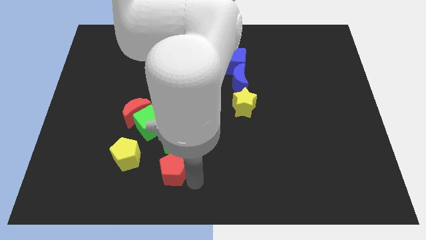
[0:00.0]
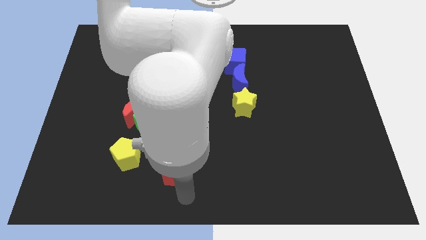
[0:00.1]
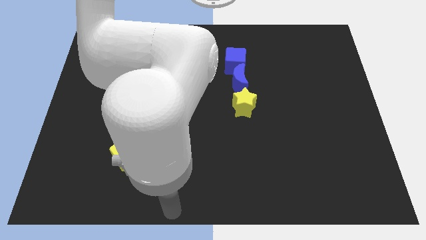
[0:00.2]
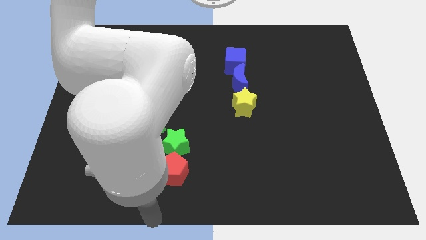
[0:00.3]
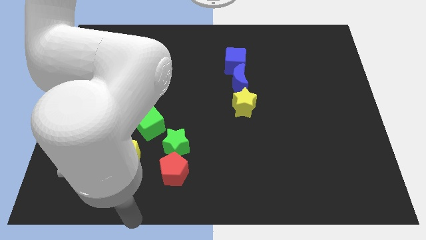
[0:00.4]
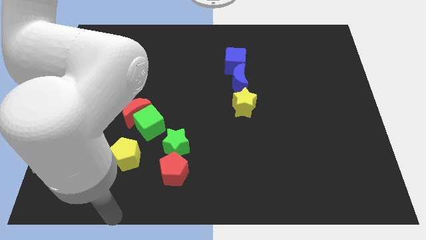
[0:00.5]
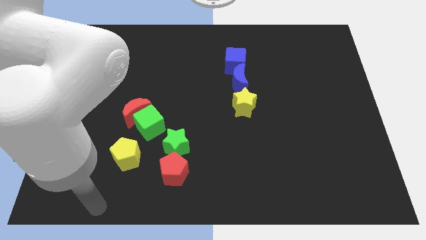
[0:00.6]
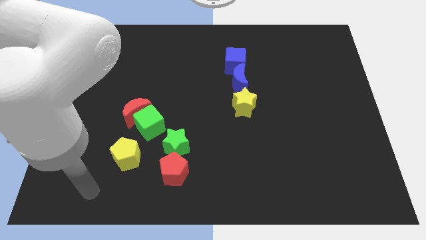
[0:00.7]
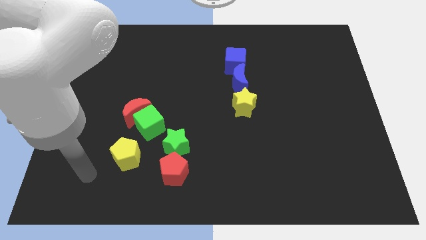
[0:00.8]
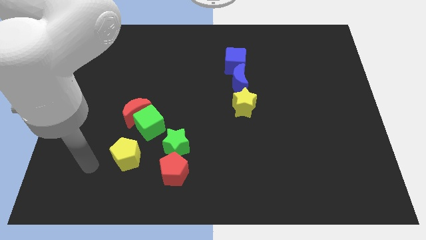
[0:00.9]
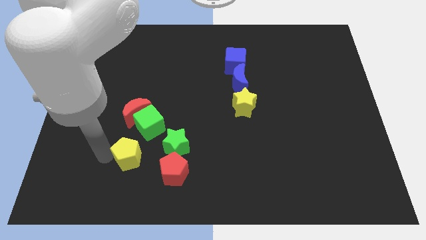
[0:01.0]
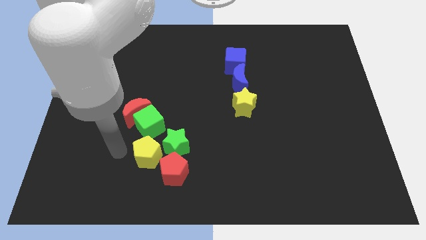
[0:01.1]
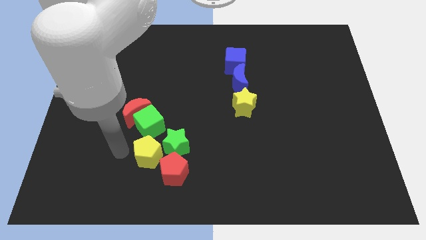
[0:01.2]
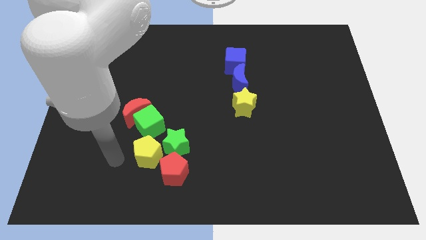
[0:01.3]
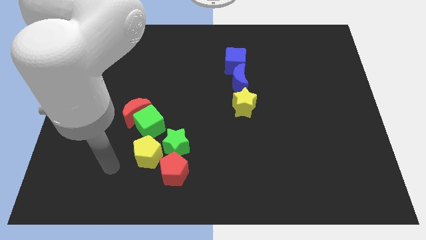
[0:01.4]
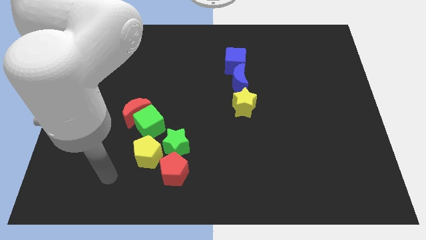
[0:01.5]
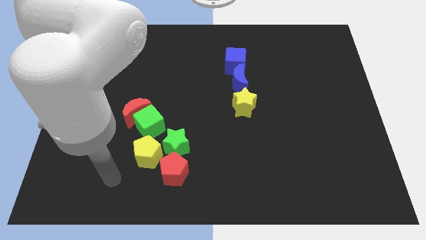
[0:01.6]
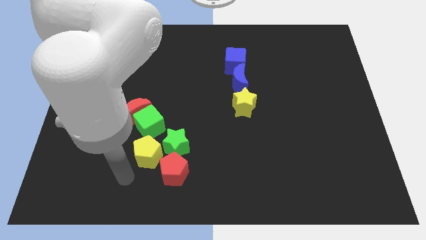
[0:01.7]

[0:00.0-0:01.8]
move the yellow pentagon close to the green star

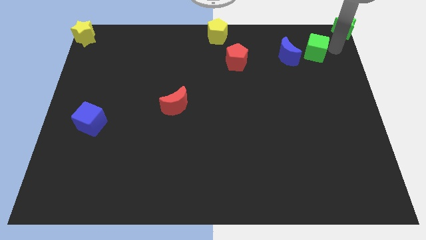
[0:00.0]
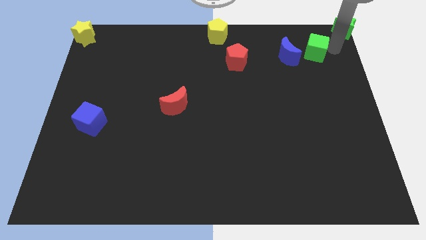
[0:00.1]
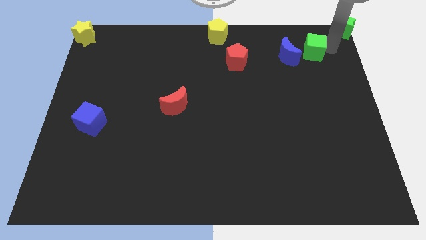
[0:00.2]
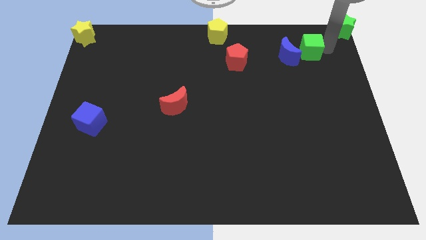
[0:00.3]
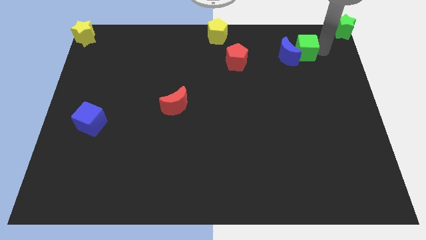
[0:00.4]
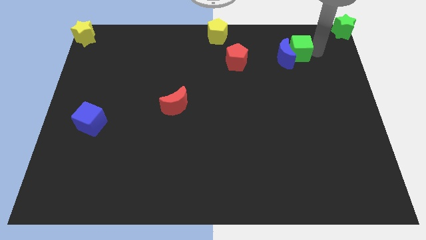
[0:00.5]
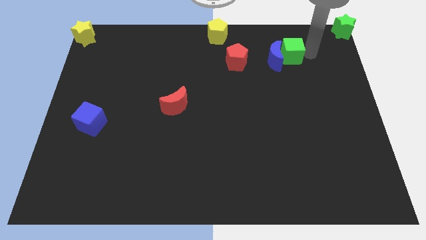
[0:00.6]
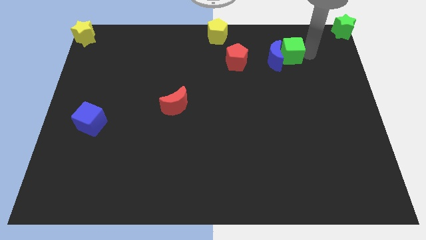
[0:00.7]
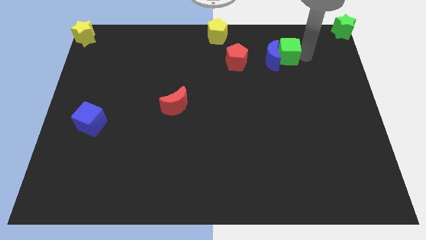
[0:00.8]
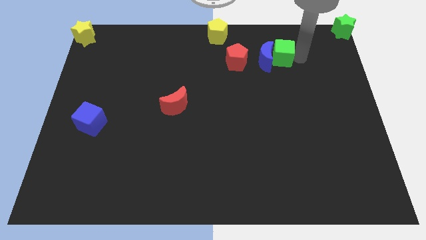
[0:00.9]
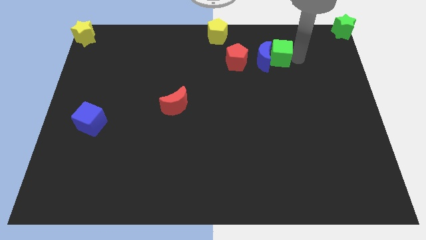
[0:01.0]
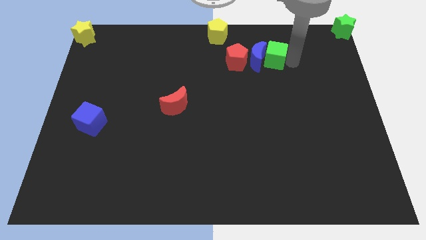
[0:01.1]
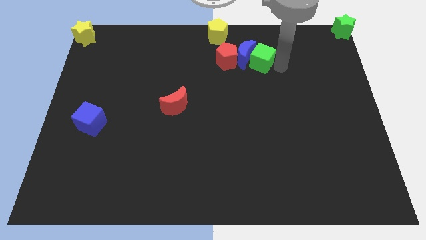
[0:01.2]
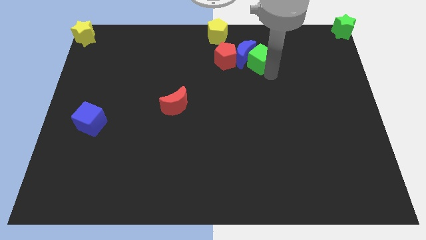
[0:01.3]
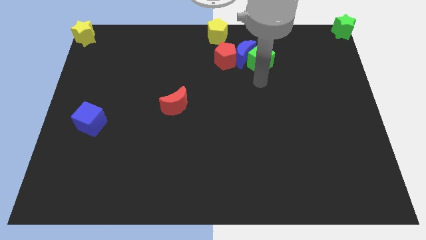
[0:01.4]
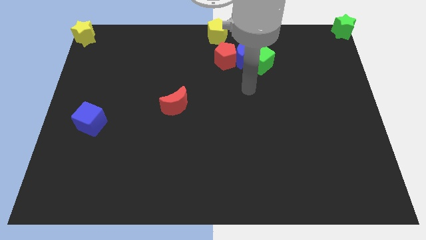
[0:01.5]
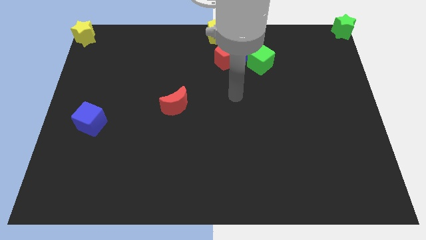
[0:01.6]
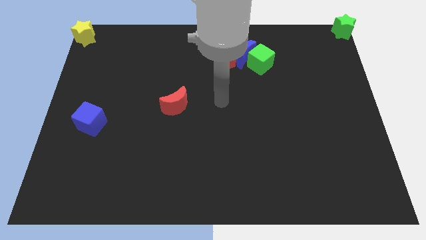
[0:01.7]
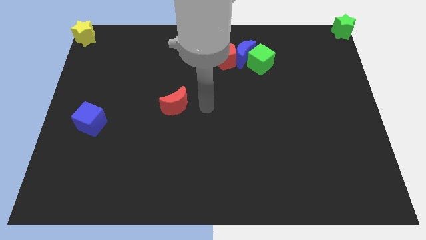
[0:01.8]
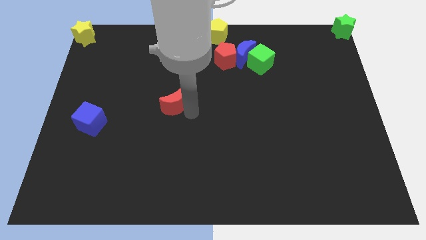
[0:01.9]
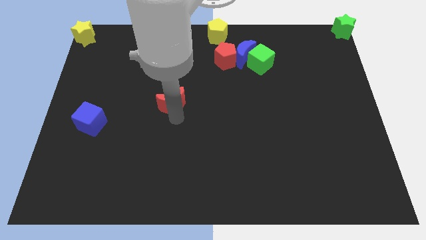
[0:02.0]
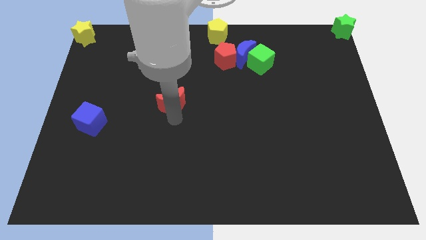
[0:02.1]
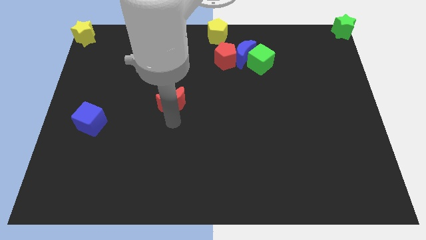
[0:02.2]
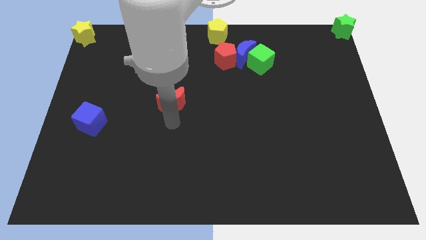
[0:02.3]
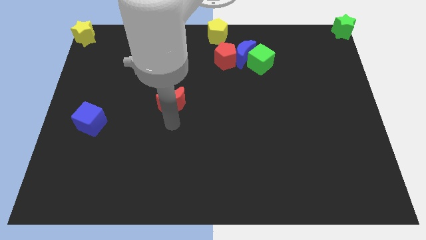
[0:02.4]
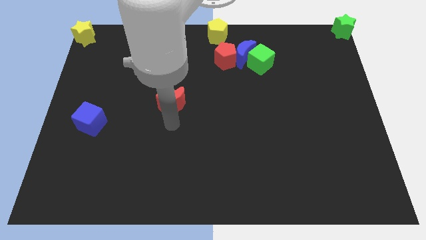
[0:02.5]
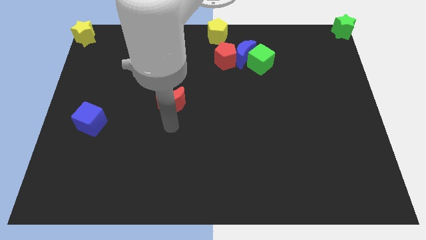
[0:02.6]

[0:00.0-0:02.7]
move the green cube into the blue moon towards the red pentagon

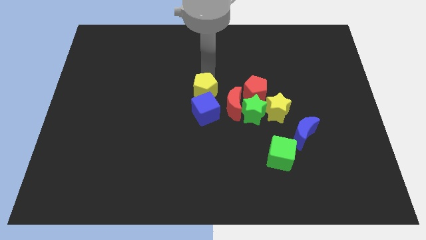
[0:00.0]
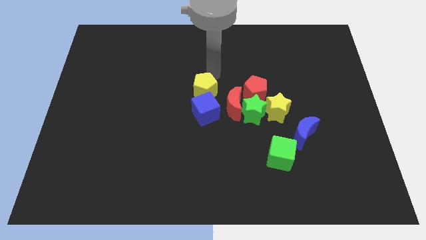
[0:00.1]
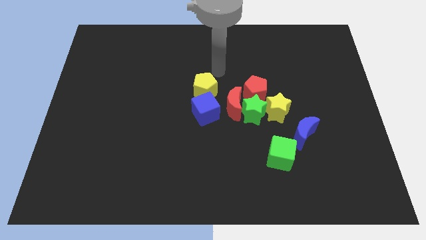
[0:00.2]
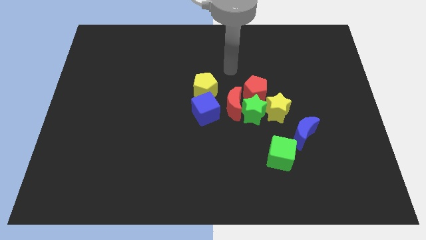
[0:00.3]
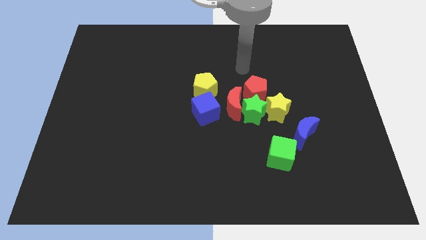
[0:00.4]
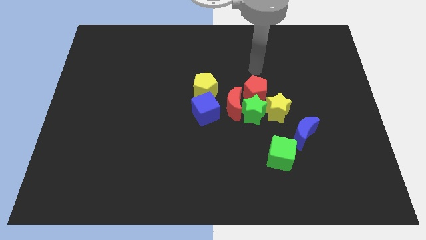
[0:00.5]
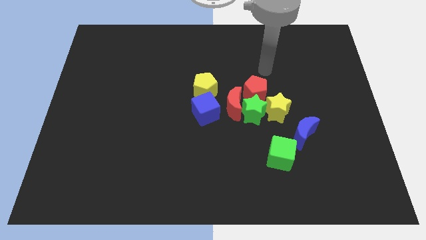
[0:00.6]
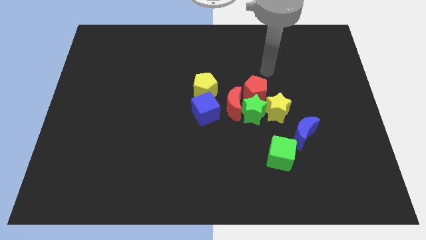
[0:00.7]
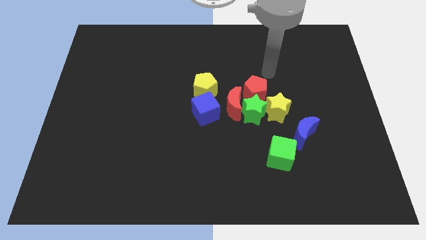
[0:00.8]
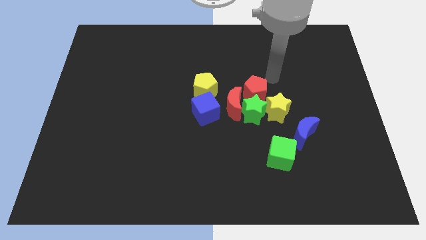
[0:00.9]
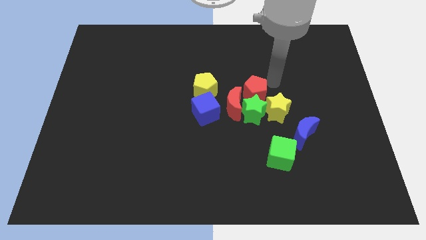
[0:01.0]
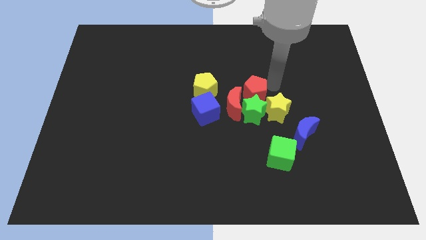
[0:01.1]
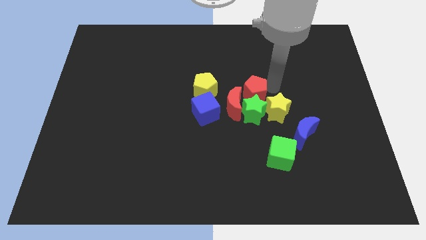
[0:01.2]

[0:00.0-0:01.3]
point your arm right to red pentagon

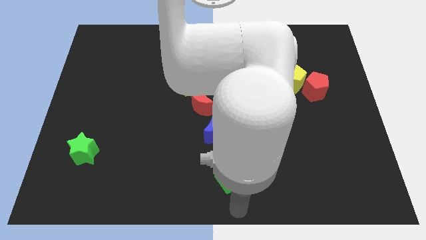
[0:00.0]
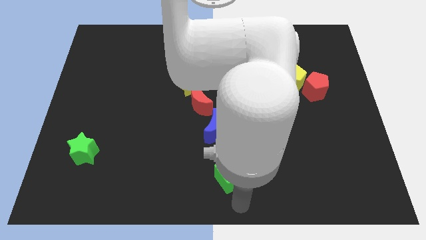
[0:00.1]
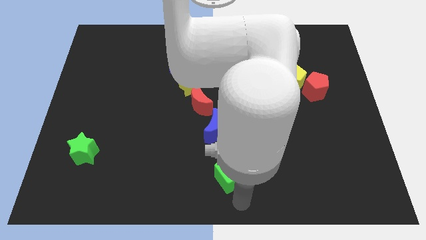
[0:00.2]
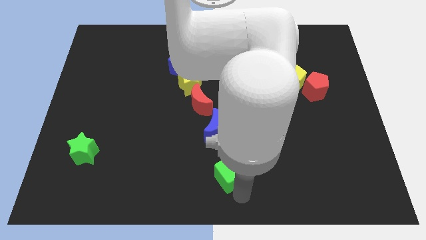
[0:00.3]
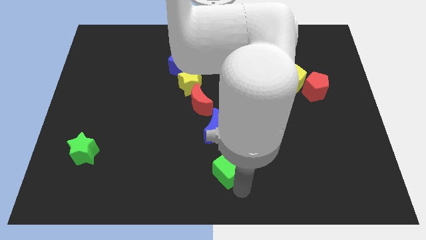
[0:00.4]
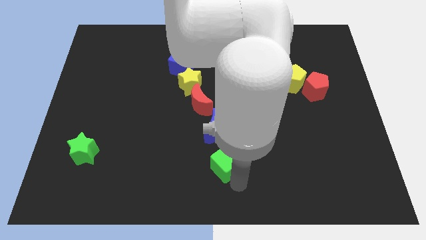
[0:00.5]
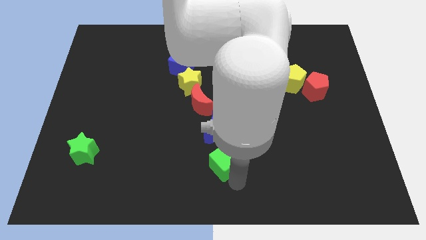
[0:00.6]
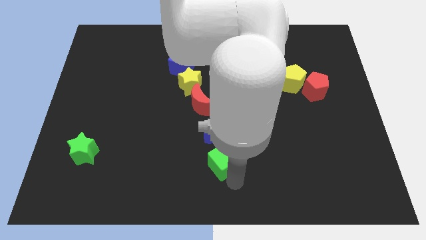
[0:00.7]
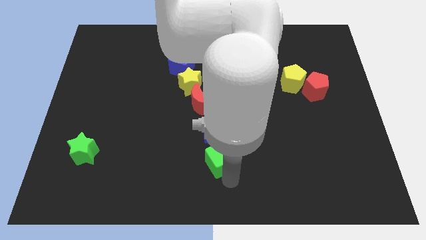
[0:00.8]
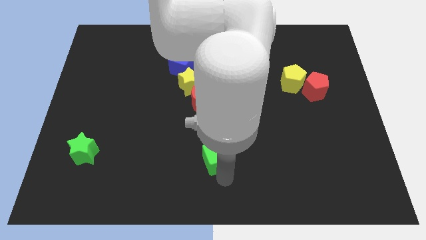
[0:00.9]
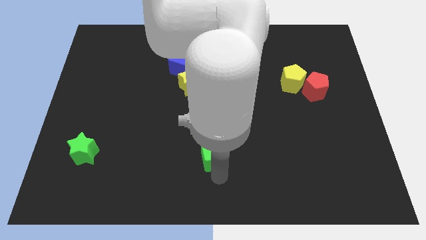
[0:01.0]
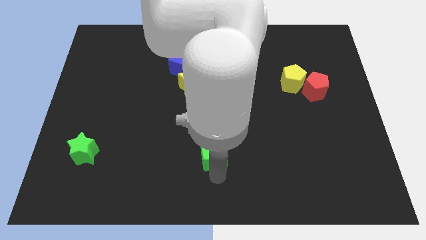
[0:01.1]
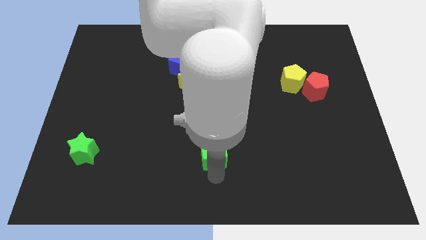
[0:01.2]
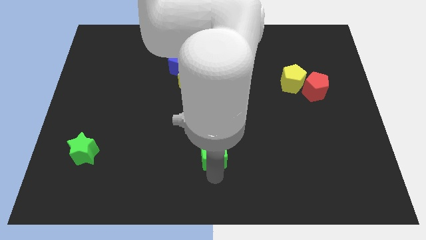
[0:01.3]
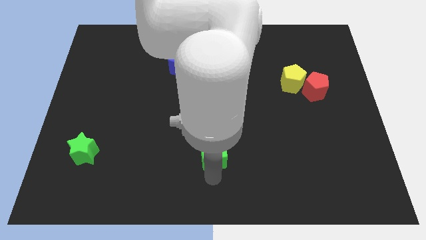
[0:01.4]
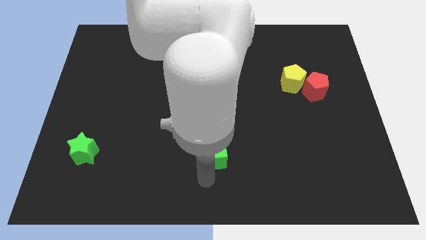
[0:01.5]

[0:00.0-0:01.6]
adjust the green cube at the bottom of the blue moon

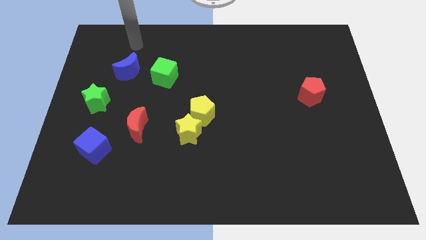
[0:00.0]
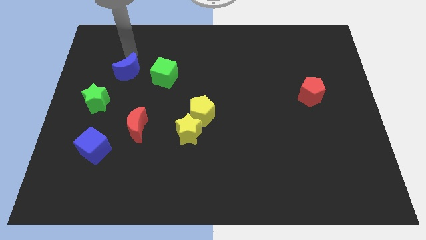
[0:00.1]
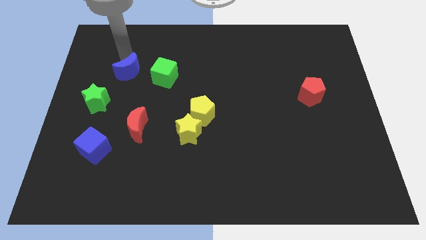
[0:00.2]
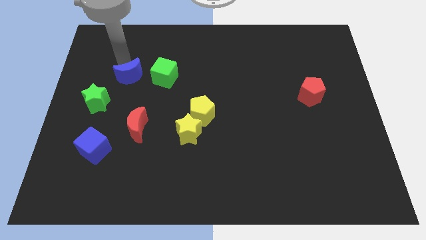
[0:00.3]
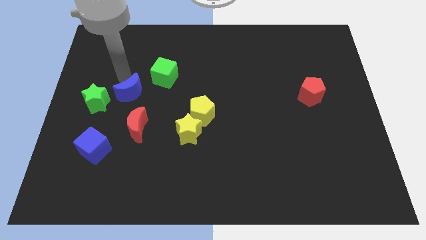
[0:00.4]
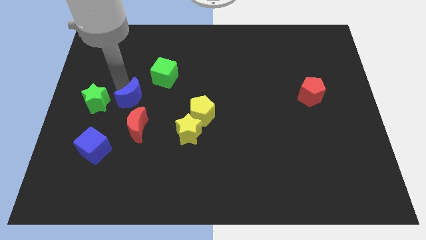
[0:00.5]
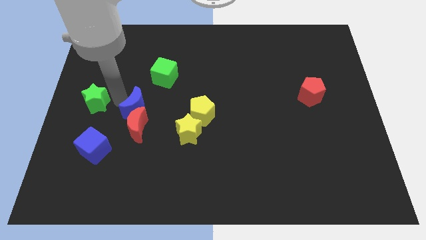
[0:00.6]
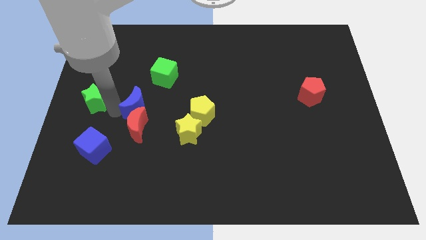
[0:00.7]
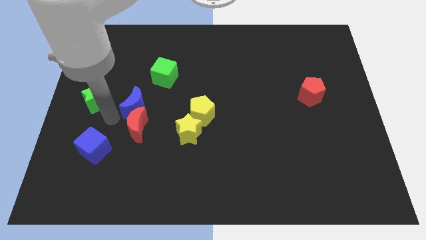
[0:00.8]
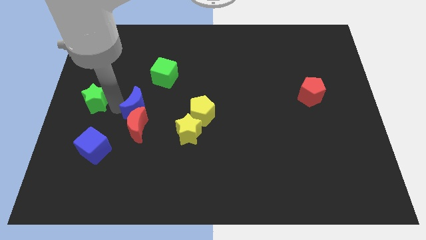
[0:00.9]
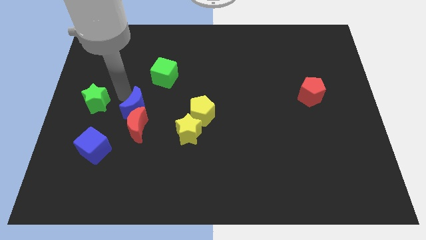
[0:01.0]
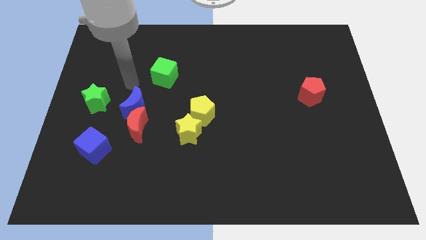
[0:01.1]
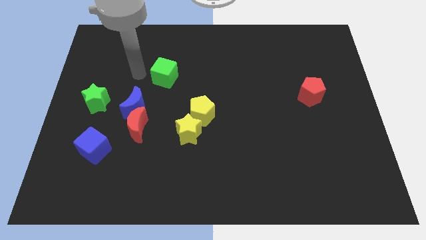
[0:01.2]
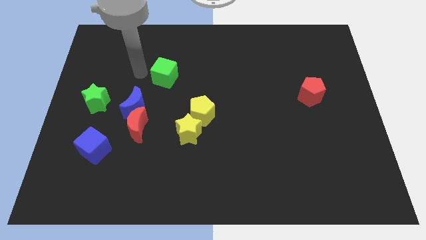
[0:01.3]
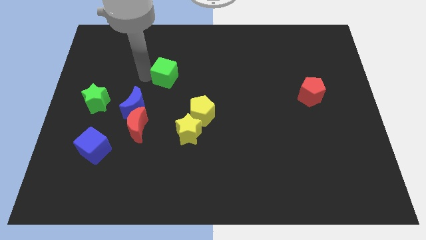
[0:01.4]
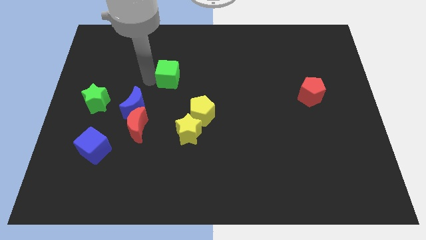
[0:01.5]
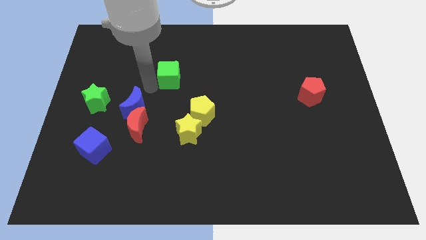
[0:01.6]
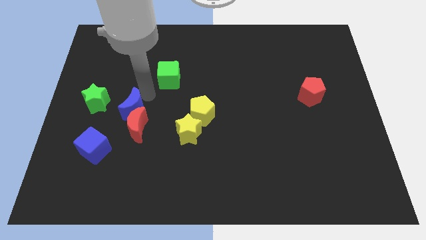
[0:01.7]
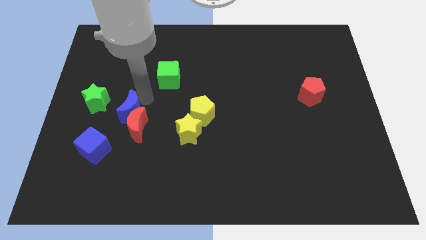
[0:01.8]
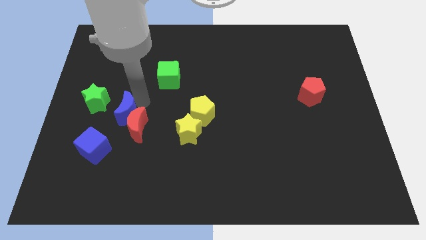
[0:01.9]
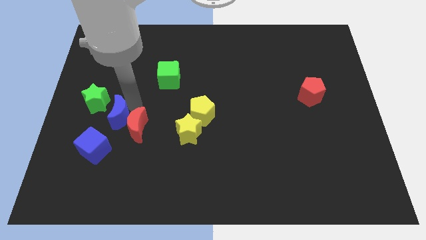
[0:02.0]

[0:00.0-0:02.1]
place the blue moon close to the red moon
